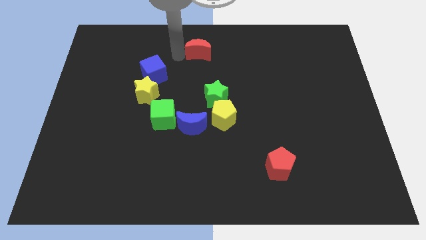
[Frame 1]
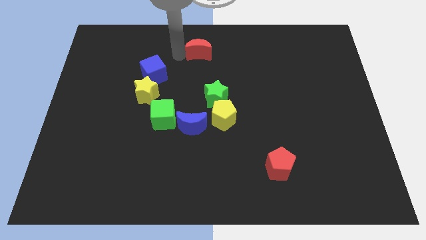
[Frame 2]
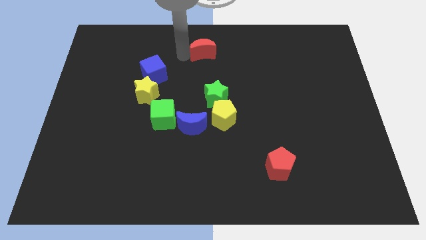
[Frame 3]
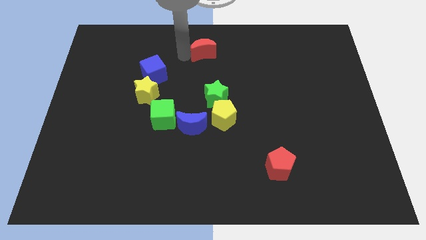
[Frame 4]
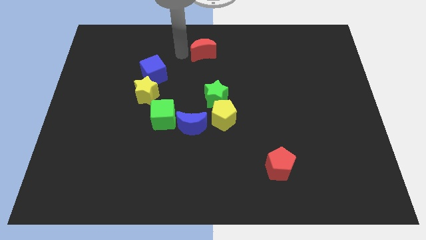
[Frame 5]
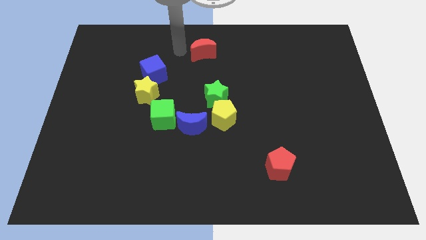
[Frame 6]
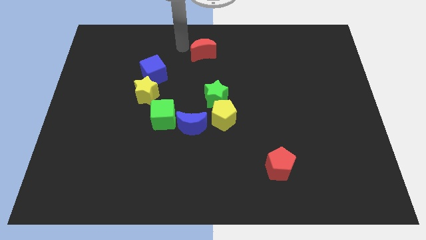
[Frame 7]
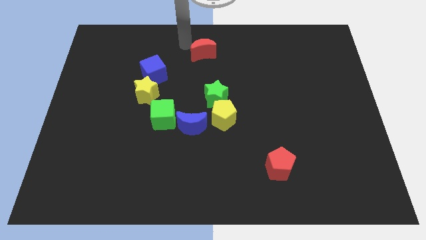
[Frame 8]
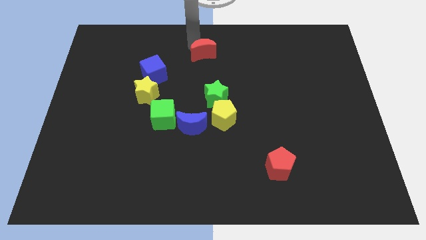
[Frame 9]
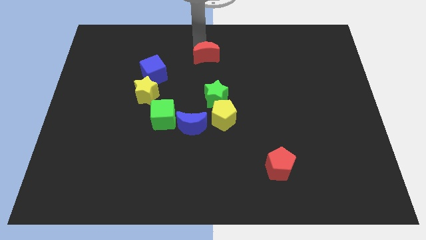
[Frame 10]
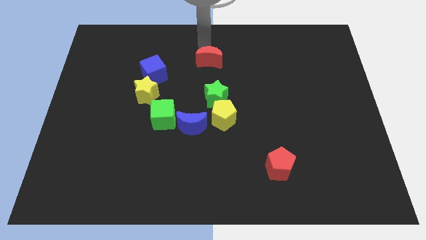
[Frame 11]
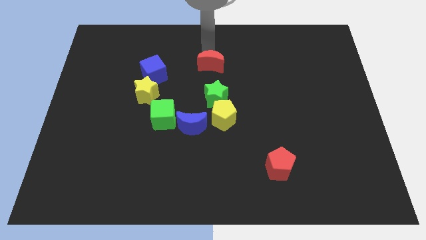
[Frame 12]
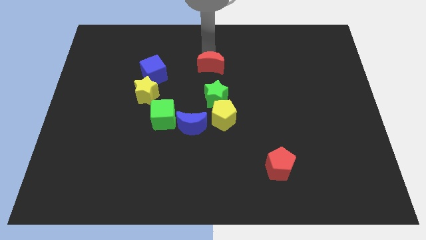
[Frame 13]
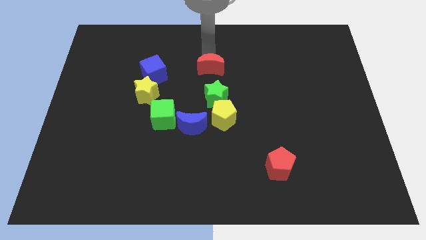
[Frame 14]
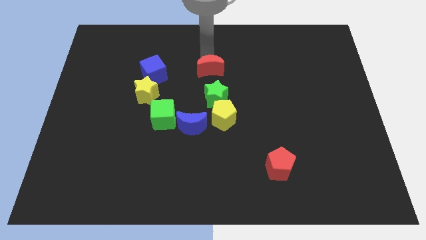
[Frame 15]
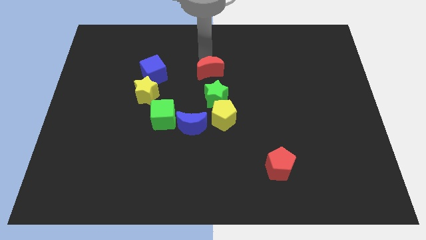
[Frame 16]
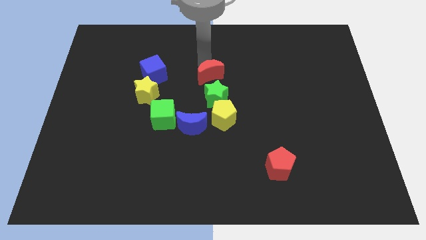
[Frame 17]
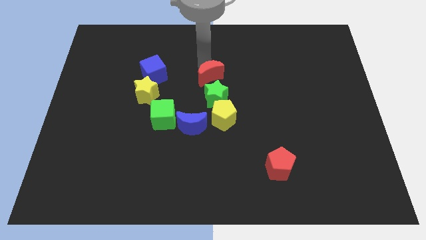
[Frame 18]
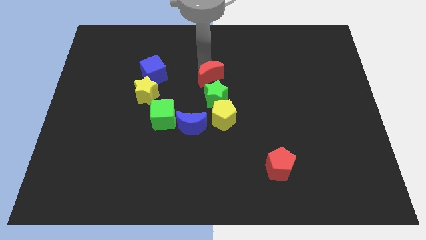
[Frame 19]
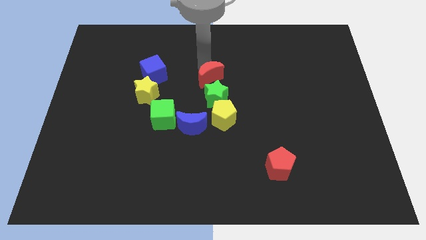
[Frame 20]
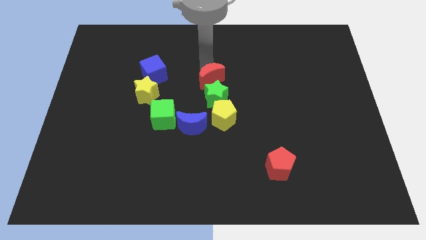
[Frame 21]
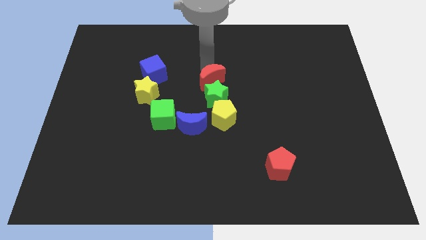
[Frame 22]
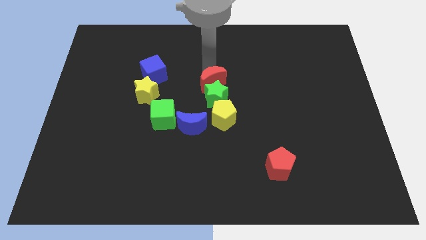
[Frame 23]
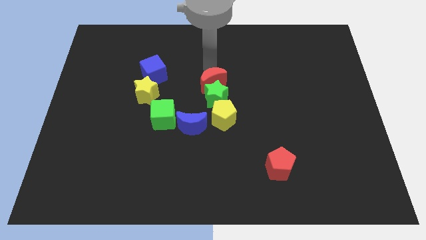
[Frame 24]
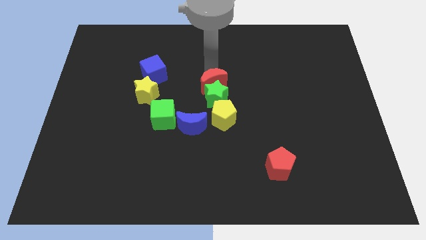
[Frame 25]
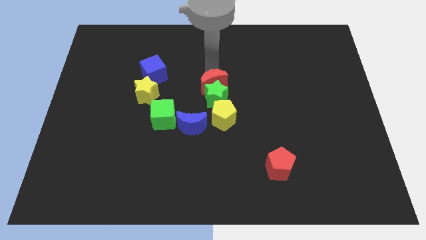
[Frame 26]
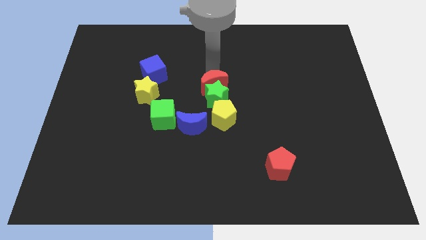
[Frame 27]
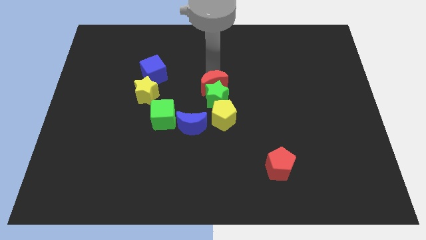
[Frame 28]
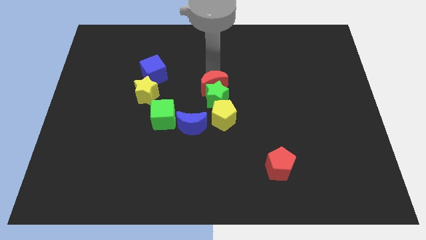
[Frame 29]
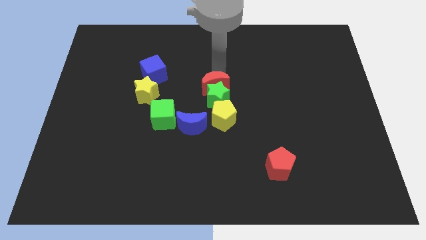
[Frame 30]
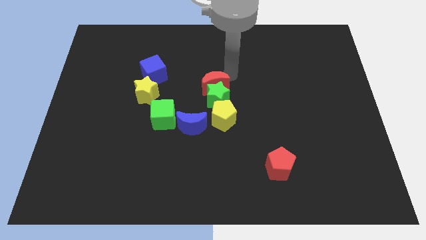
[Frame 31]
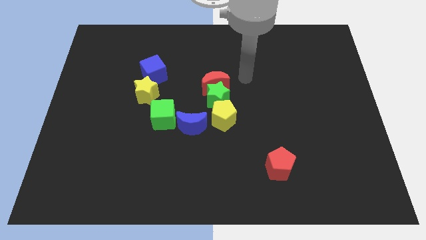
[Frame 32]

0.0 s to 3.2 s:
move the red moon to the top side of the green star

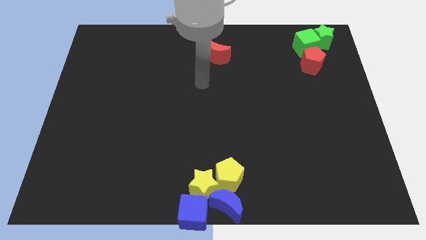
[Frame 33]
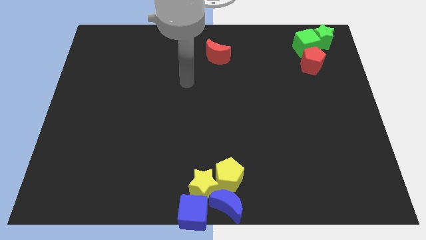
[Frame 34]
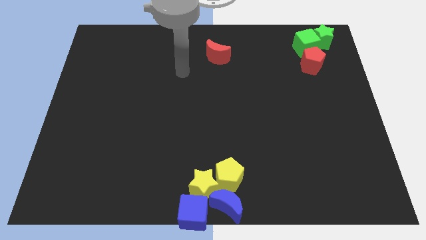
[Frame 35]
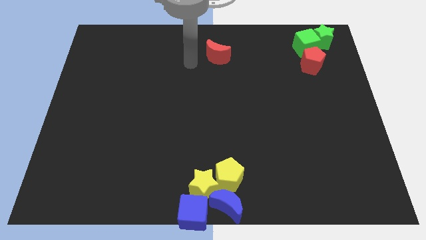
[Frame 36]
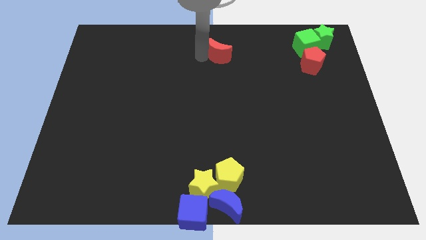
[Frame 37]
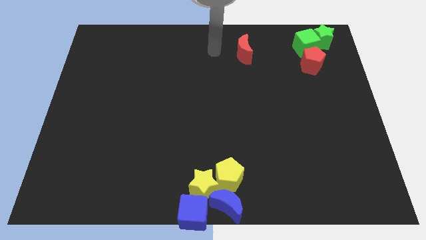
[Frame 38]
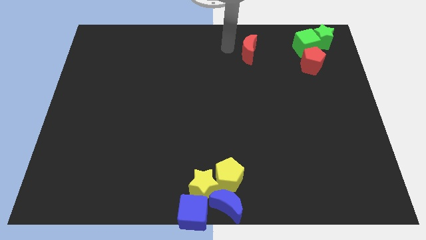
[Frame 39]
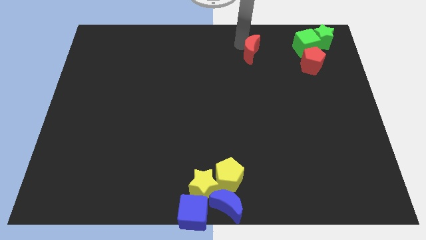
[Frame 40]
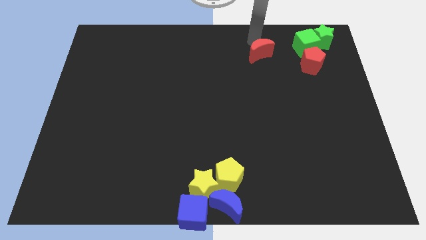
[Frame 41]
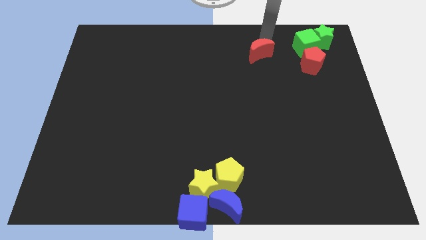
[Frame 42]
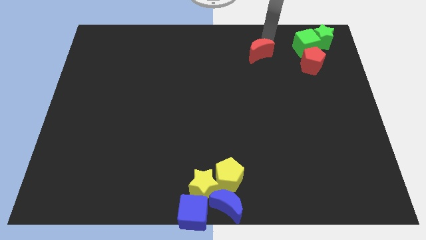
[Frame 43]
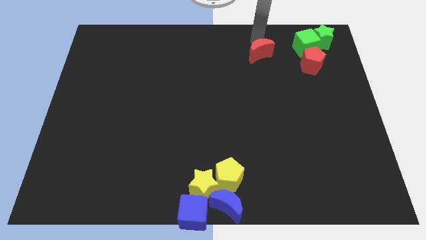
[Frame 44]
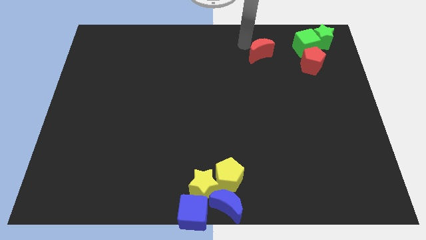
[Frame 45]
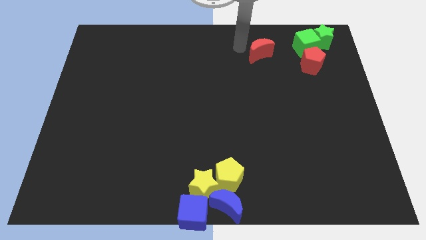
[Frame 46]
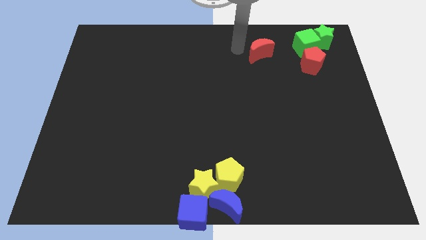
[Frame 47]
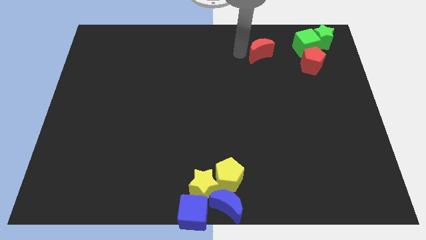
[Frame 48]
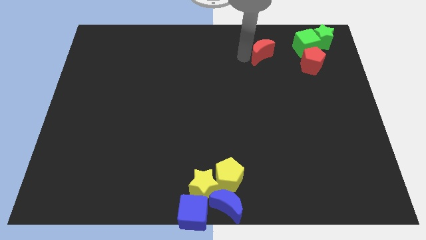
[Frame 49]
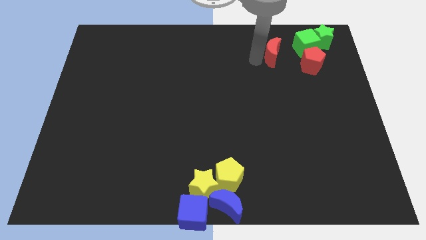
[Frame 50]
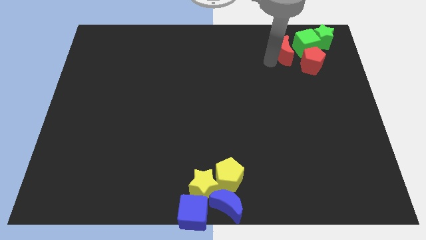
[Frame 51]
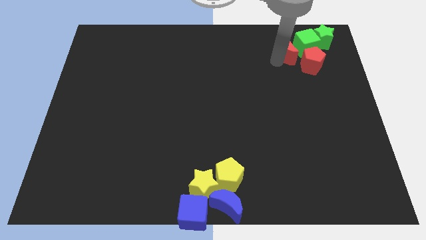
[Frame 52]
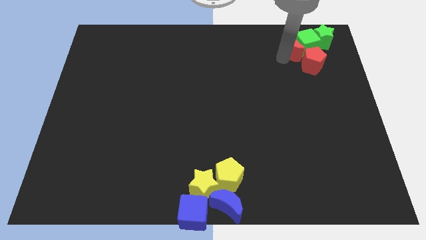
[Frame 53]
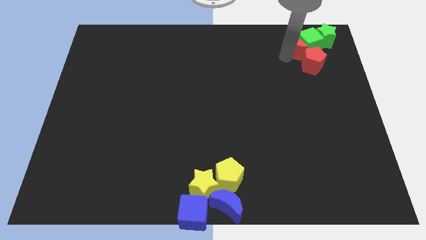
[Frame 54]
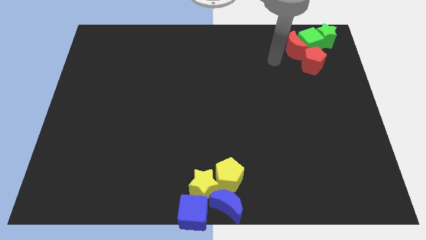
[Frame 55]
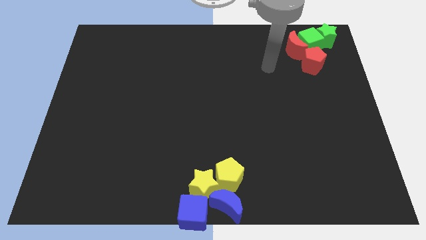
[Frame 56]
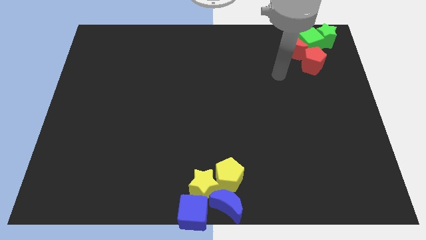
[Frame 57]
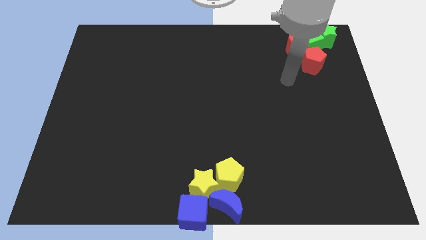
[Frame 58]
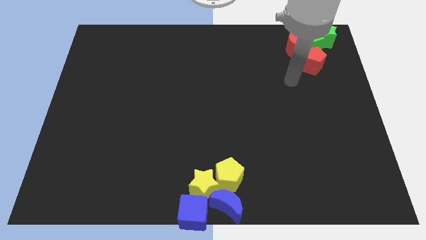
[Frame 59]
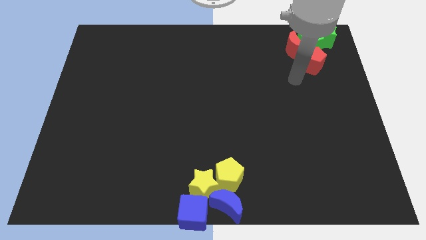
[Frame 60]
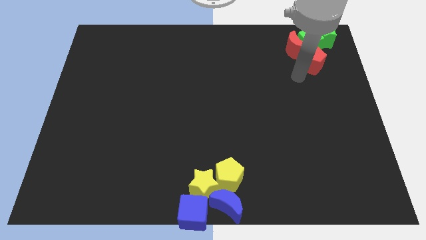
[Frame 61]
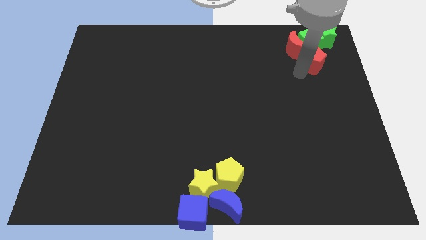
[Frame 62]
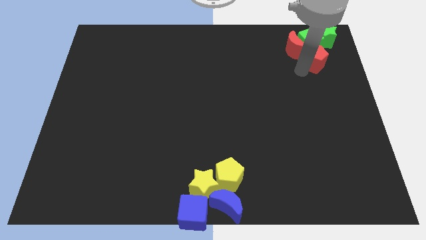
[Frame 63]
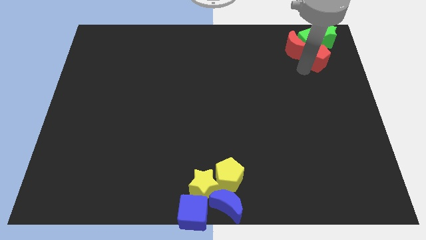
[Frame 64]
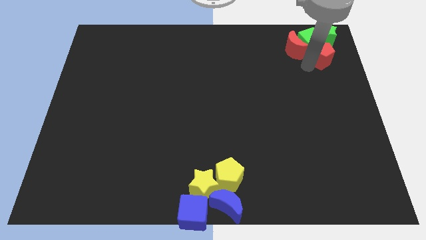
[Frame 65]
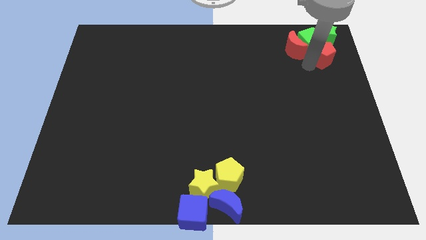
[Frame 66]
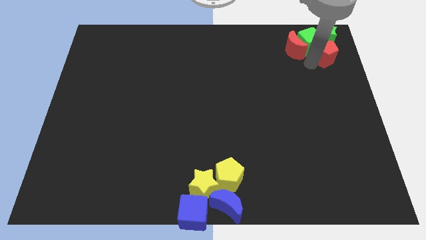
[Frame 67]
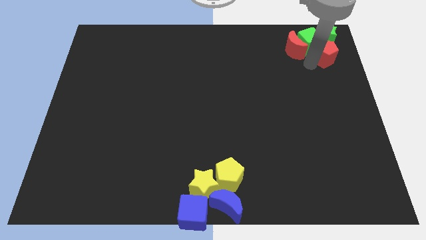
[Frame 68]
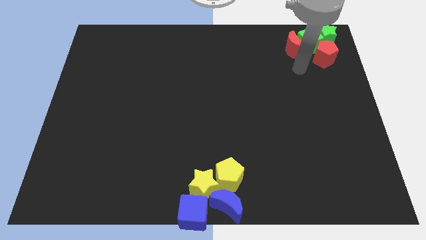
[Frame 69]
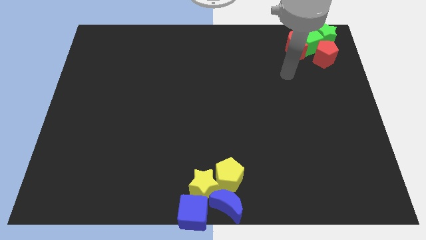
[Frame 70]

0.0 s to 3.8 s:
move the red moon and red pentagon into green blocks at the top right of the board

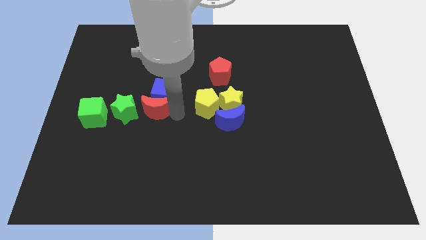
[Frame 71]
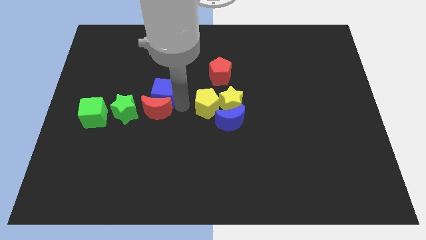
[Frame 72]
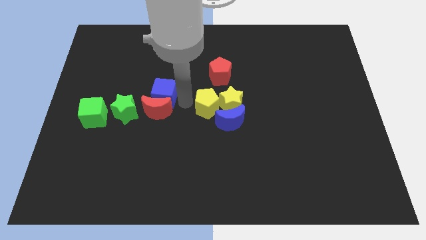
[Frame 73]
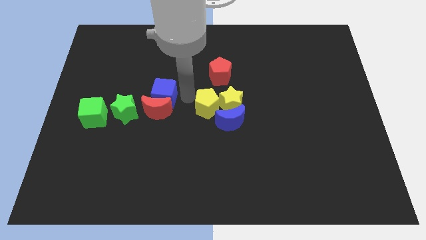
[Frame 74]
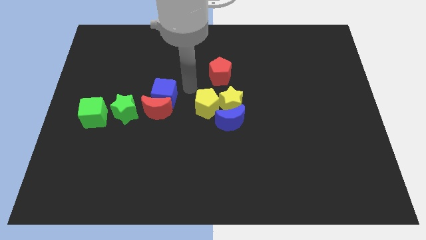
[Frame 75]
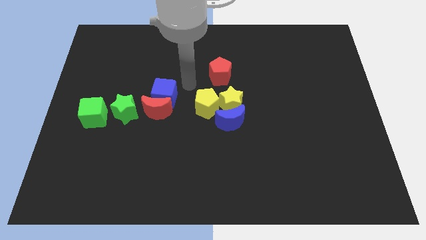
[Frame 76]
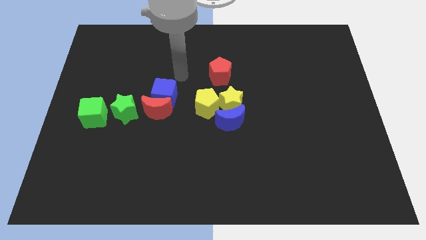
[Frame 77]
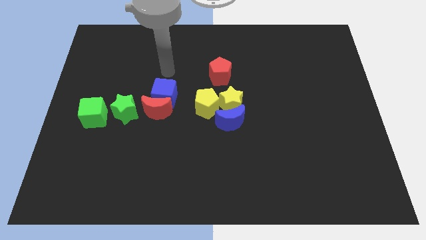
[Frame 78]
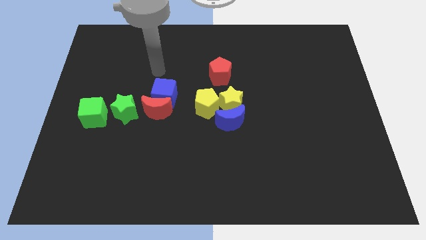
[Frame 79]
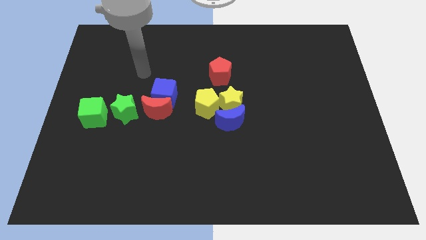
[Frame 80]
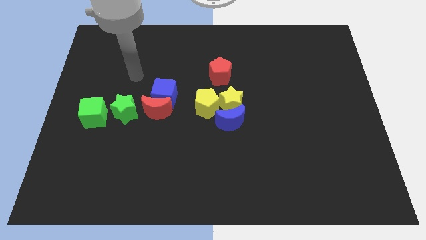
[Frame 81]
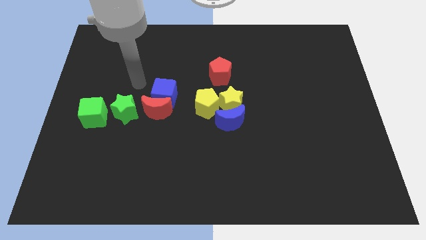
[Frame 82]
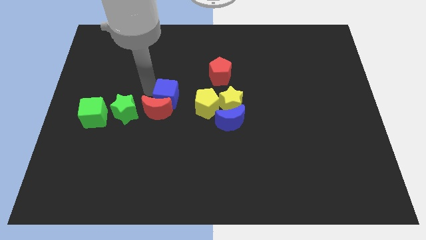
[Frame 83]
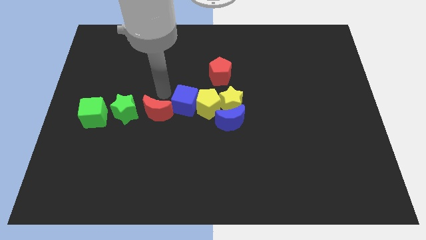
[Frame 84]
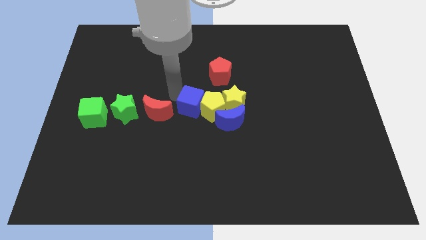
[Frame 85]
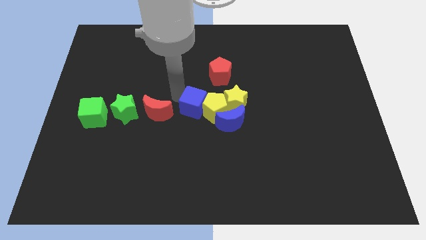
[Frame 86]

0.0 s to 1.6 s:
push the blue cube into the yellow pentagon

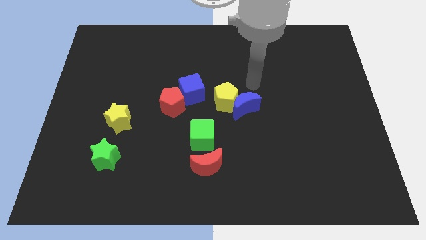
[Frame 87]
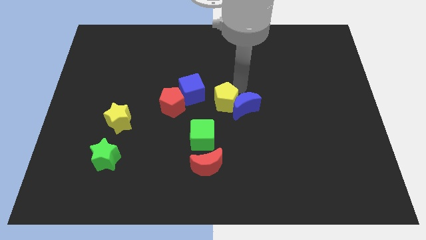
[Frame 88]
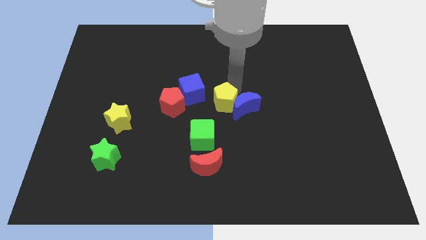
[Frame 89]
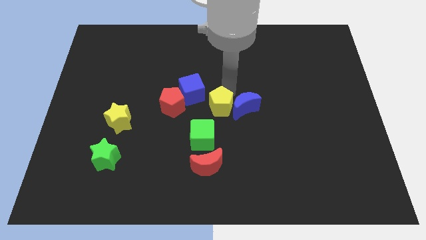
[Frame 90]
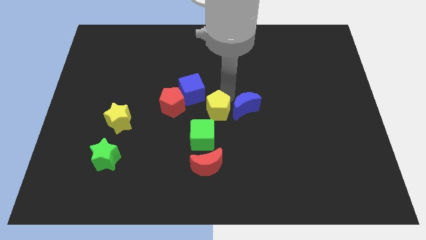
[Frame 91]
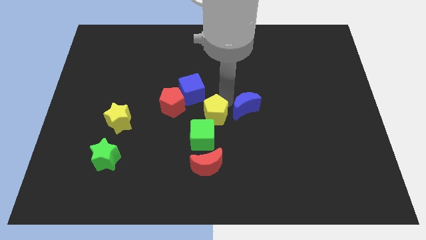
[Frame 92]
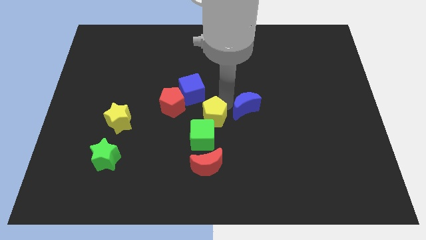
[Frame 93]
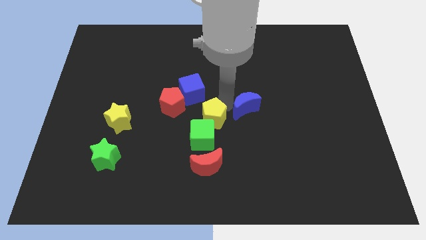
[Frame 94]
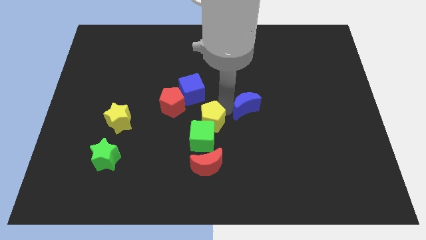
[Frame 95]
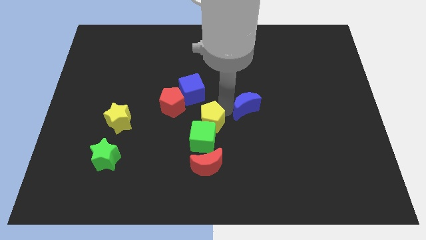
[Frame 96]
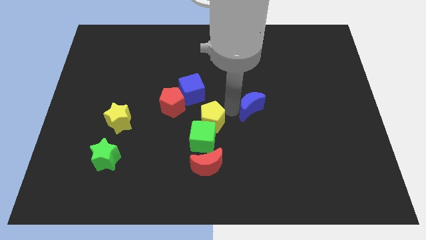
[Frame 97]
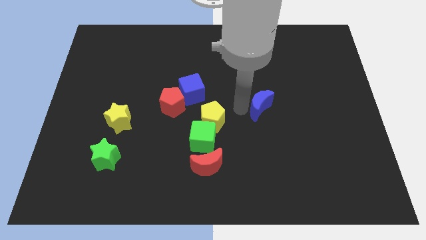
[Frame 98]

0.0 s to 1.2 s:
move the yellow pentagon into the green cube
